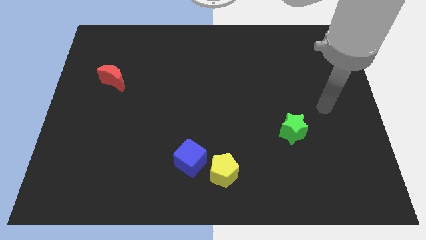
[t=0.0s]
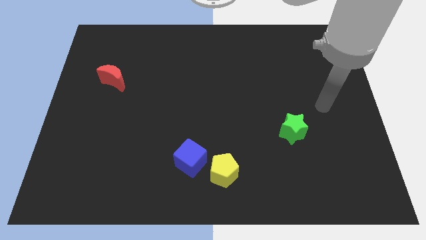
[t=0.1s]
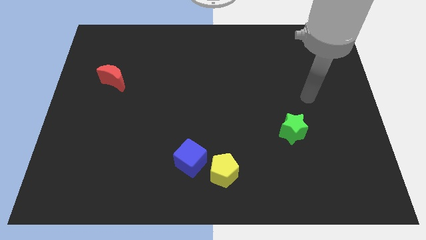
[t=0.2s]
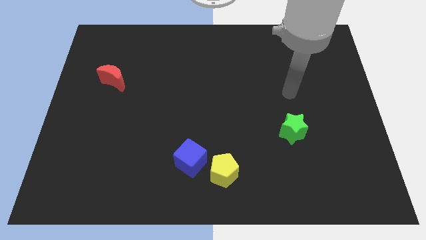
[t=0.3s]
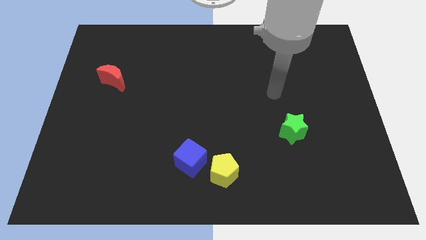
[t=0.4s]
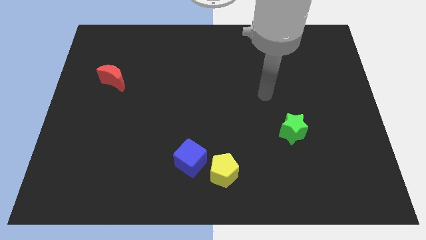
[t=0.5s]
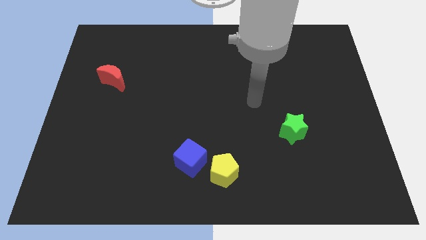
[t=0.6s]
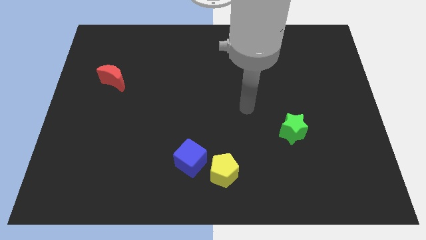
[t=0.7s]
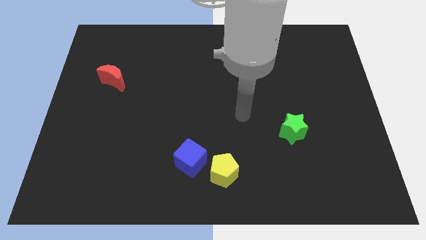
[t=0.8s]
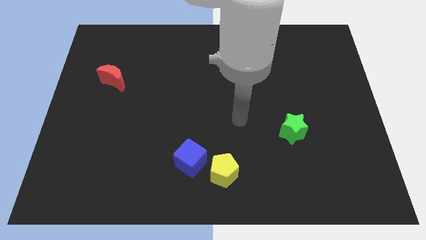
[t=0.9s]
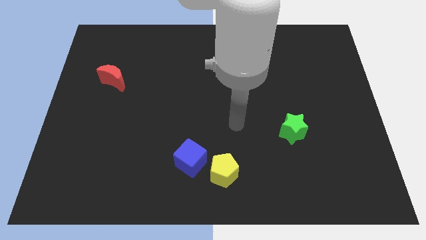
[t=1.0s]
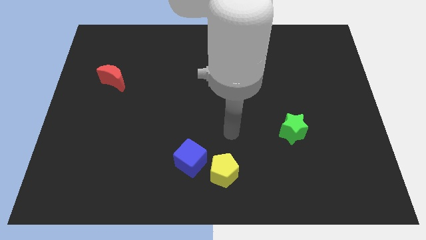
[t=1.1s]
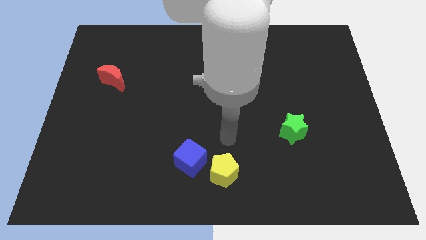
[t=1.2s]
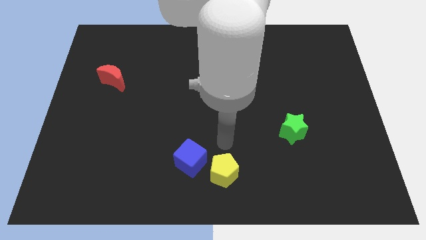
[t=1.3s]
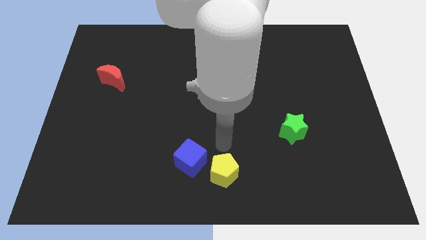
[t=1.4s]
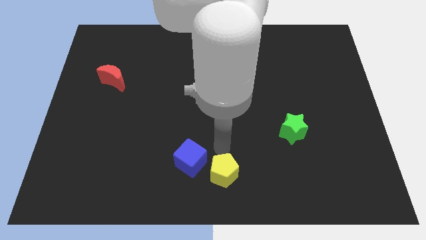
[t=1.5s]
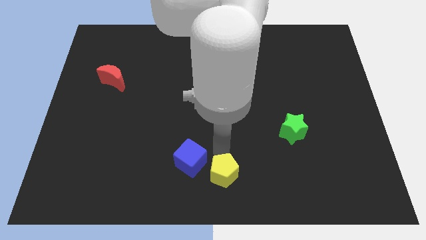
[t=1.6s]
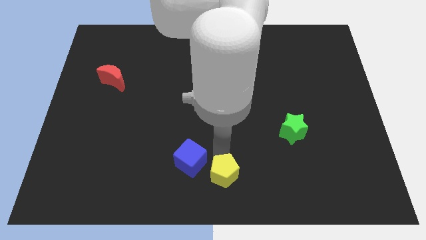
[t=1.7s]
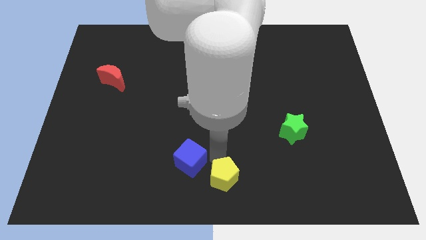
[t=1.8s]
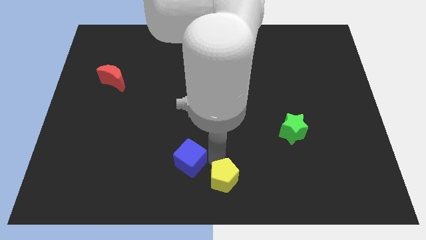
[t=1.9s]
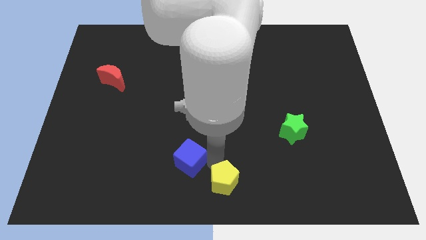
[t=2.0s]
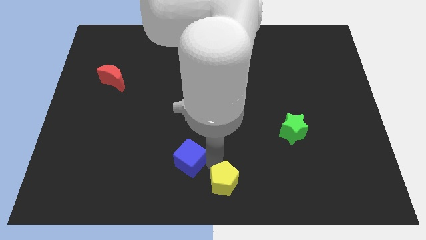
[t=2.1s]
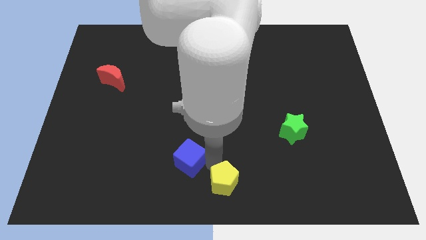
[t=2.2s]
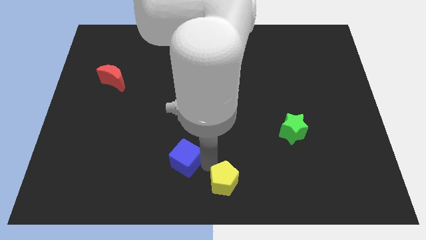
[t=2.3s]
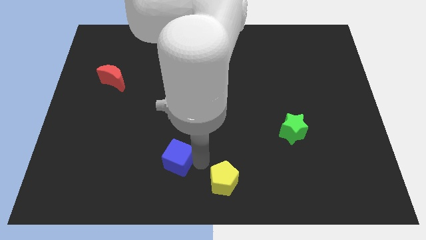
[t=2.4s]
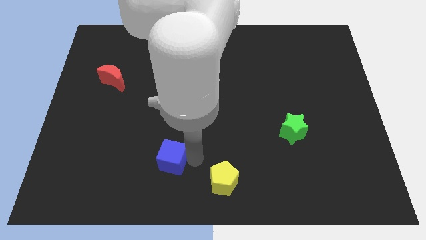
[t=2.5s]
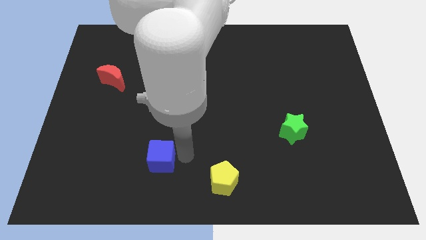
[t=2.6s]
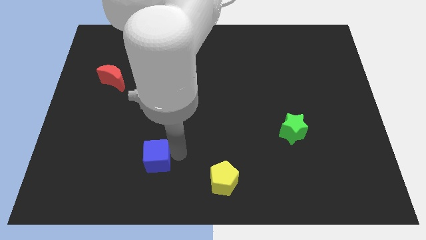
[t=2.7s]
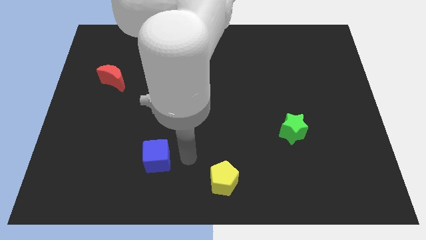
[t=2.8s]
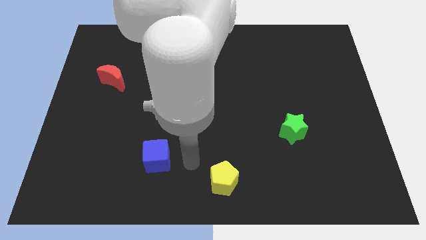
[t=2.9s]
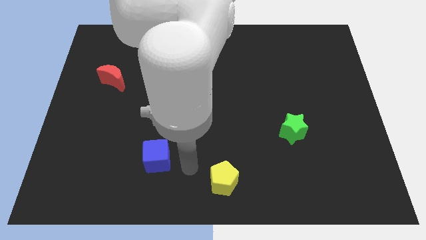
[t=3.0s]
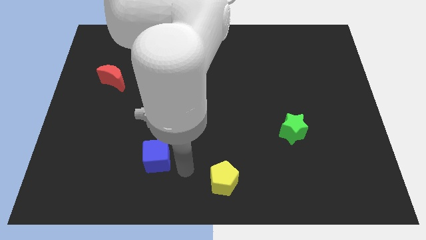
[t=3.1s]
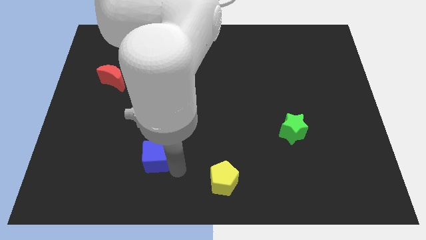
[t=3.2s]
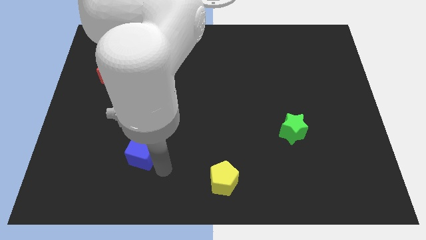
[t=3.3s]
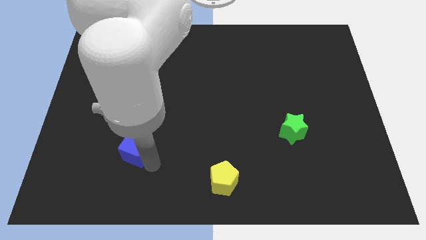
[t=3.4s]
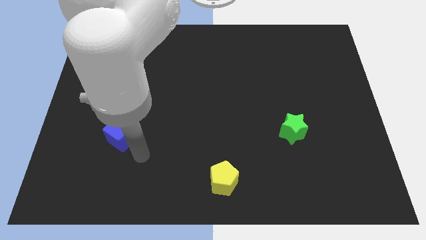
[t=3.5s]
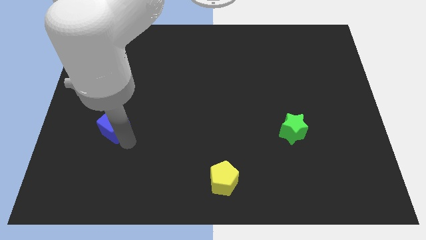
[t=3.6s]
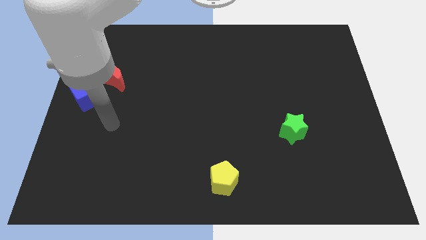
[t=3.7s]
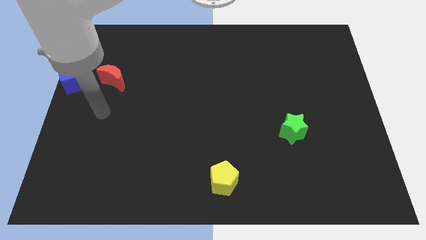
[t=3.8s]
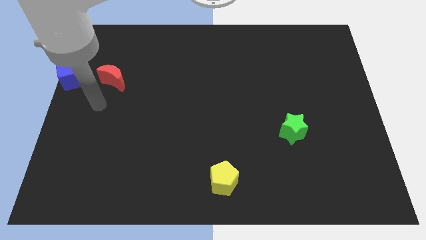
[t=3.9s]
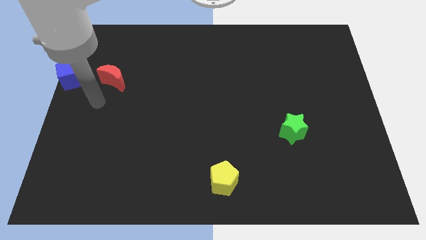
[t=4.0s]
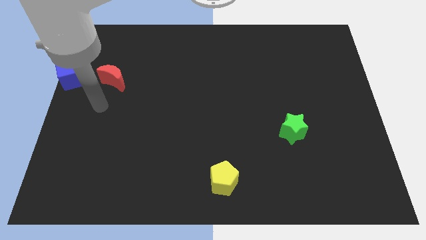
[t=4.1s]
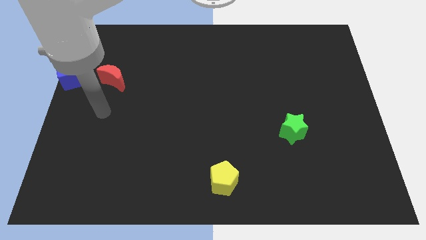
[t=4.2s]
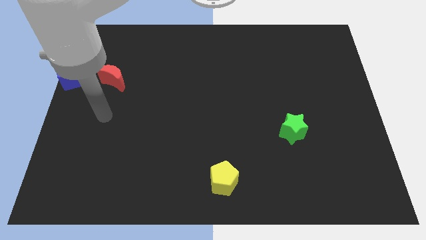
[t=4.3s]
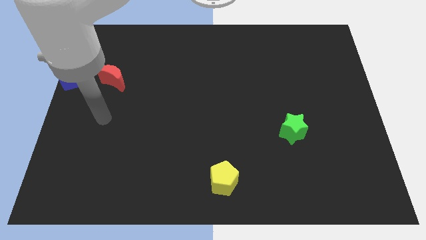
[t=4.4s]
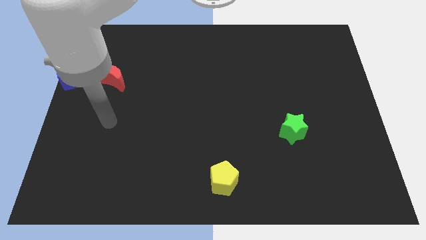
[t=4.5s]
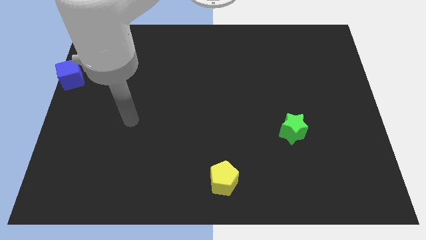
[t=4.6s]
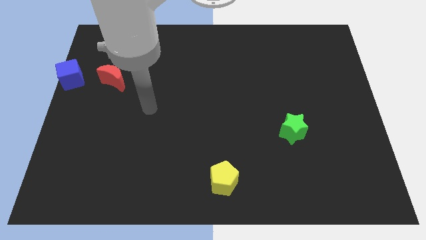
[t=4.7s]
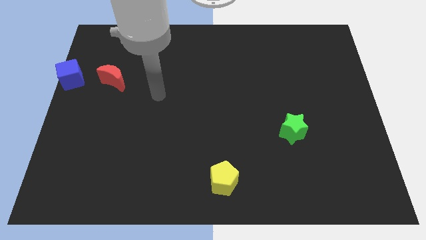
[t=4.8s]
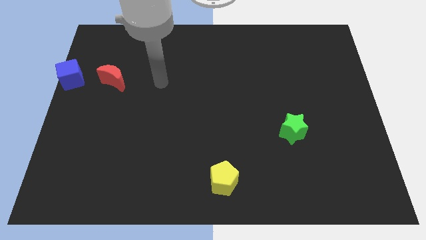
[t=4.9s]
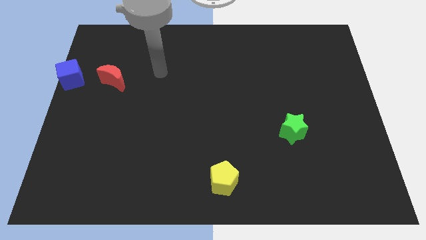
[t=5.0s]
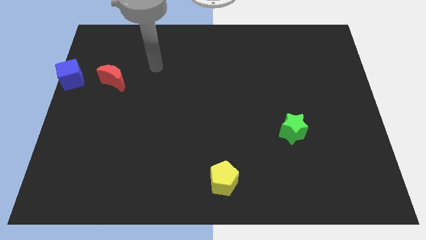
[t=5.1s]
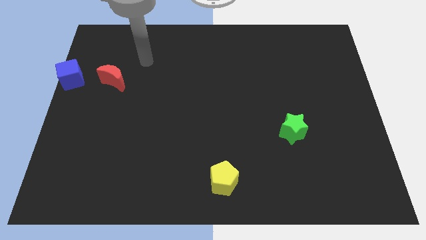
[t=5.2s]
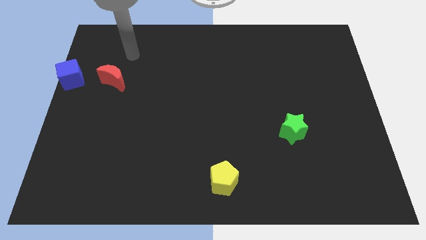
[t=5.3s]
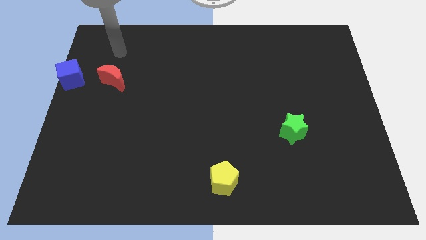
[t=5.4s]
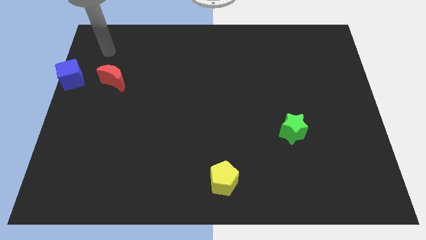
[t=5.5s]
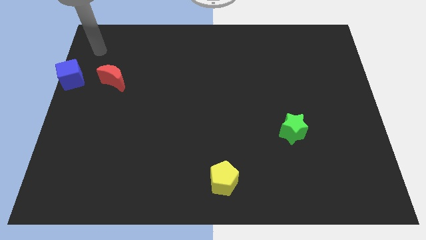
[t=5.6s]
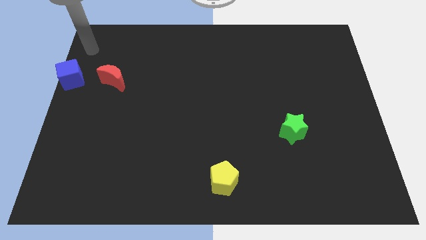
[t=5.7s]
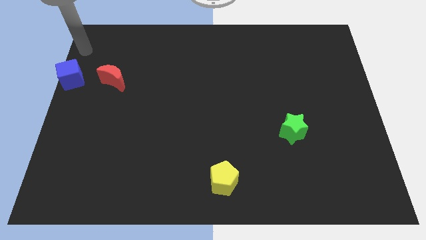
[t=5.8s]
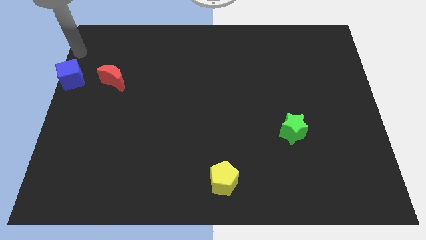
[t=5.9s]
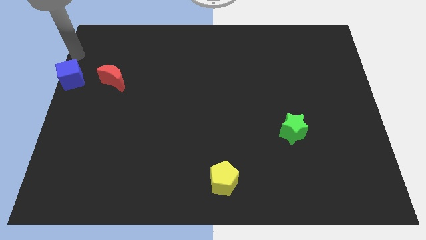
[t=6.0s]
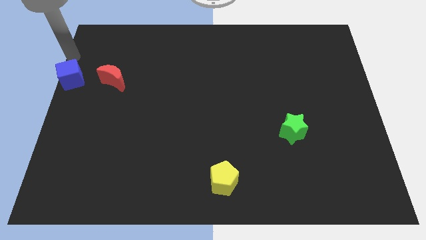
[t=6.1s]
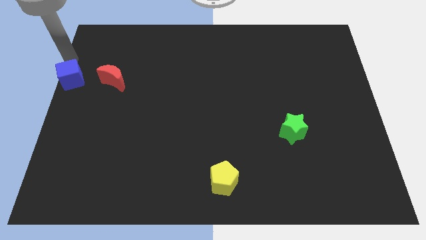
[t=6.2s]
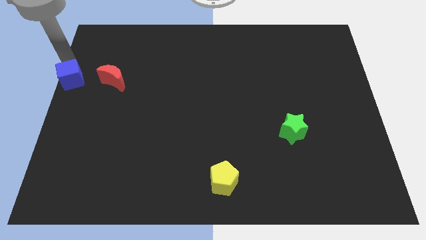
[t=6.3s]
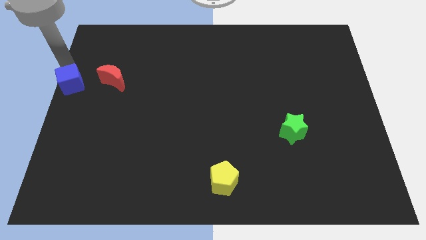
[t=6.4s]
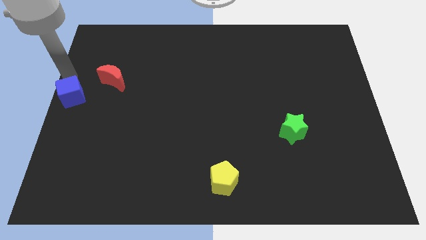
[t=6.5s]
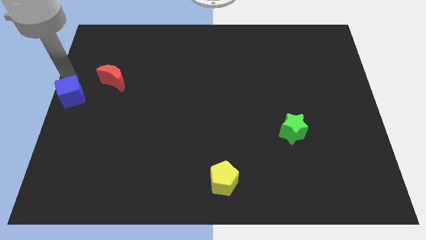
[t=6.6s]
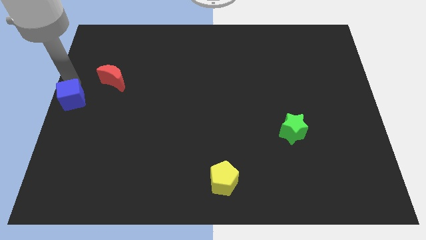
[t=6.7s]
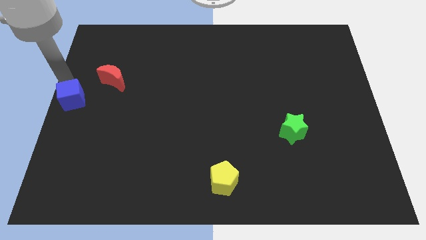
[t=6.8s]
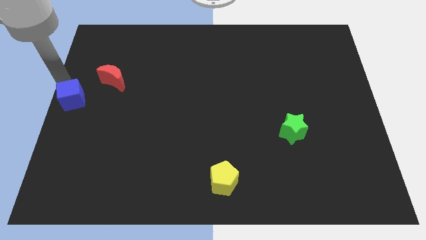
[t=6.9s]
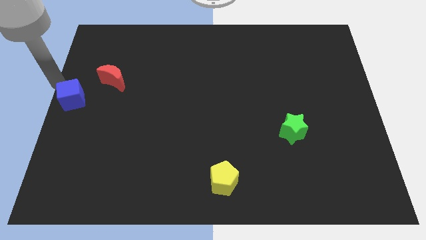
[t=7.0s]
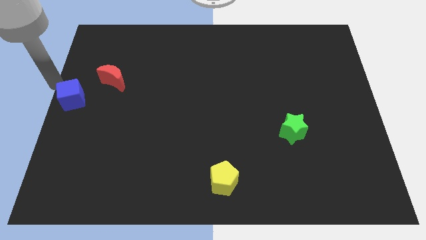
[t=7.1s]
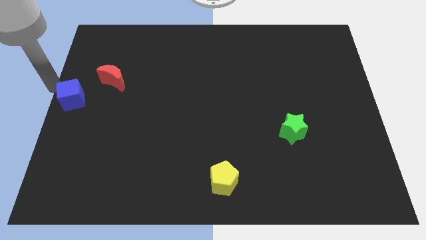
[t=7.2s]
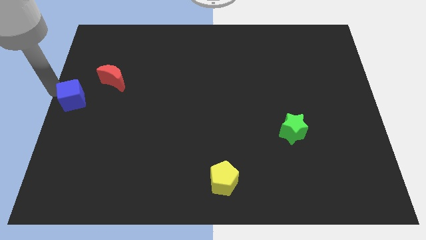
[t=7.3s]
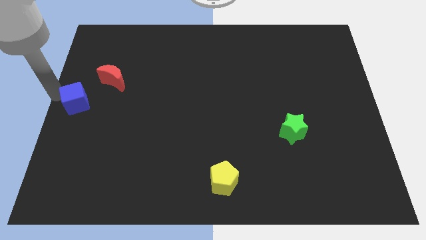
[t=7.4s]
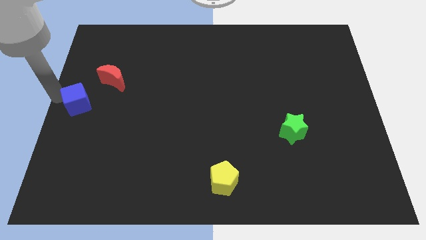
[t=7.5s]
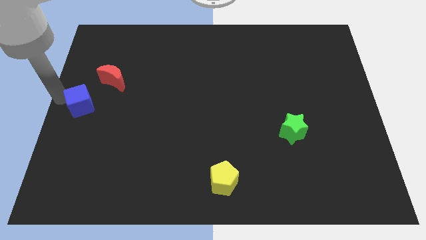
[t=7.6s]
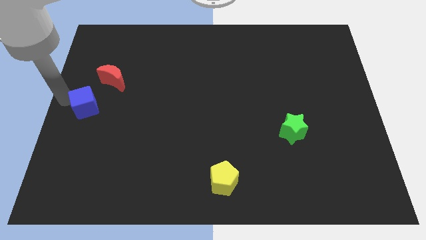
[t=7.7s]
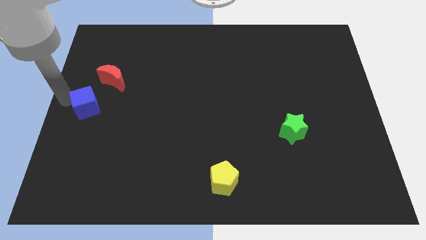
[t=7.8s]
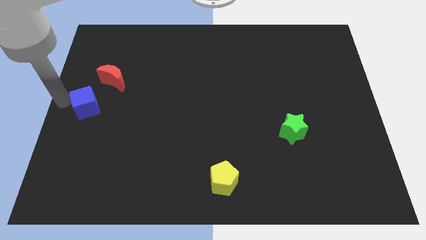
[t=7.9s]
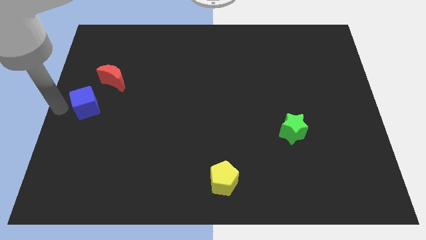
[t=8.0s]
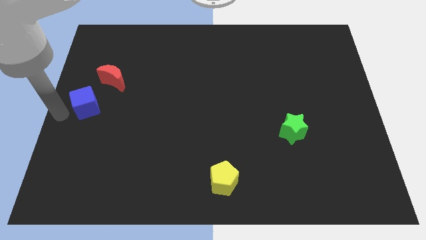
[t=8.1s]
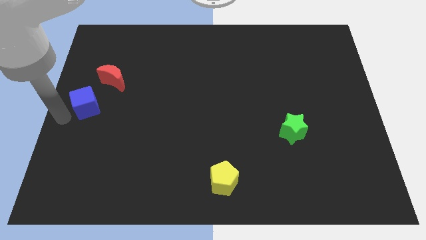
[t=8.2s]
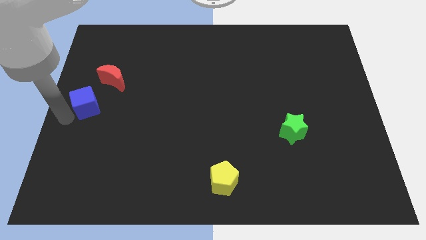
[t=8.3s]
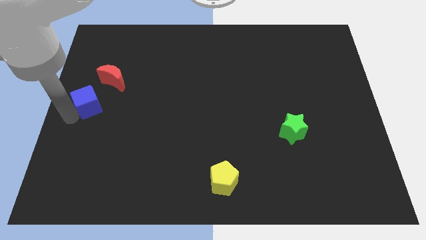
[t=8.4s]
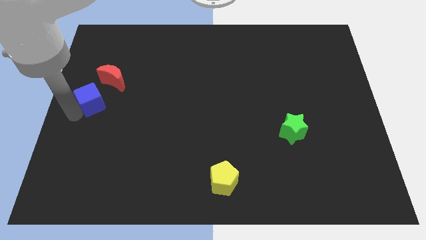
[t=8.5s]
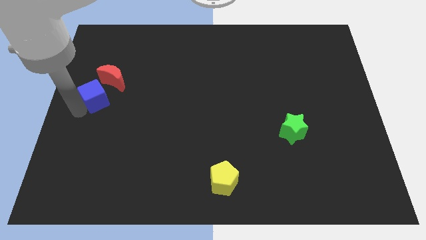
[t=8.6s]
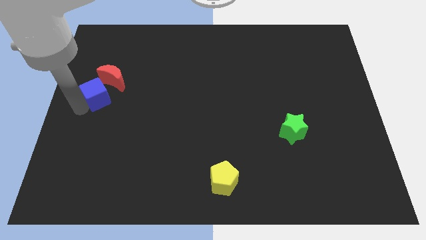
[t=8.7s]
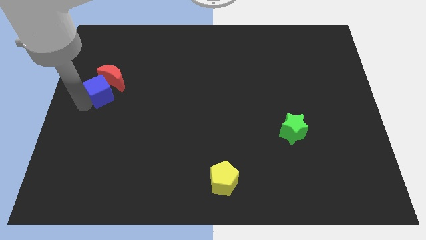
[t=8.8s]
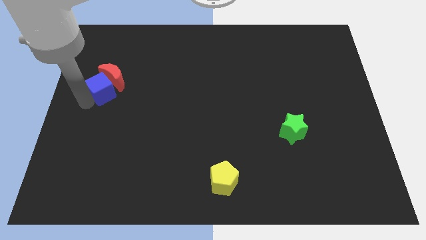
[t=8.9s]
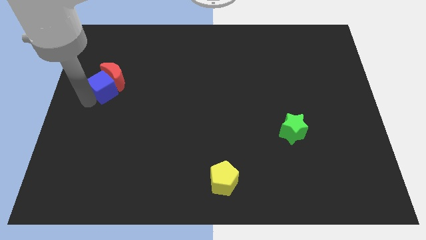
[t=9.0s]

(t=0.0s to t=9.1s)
put the cube close to the red block
